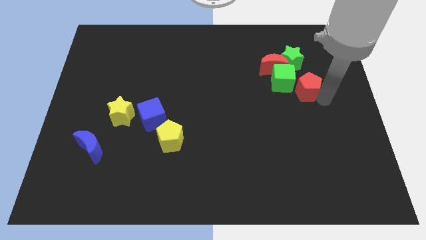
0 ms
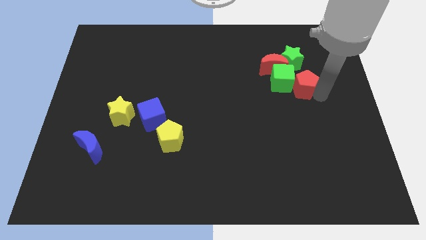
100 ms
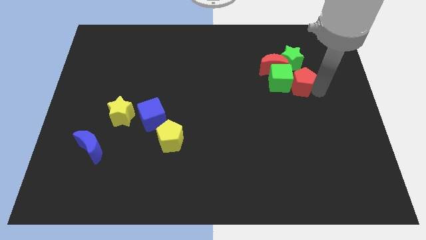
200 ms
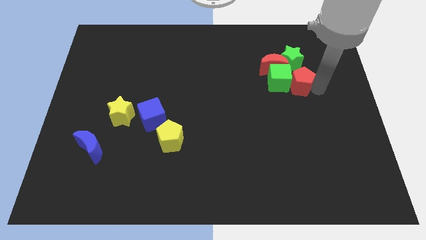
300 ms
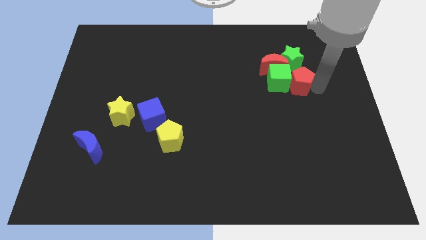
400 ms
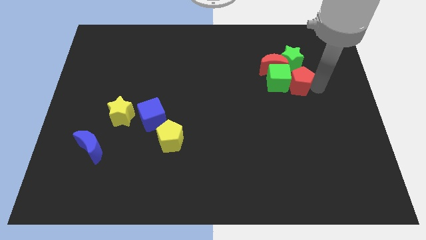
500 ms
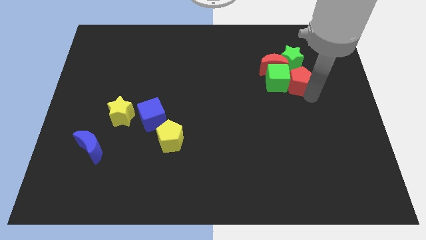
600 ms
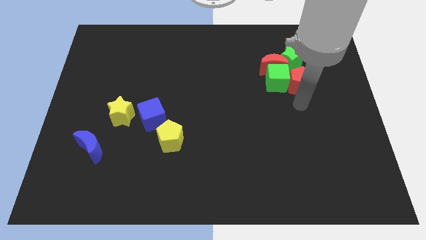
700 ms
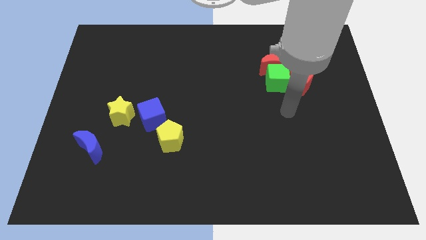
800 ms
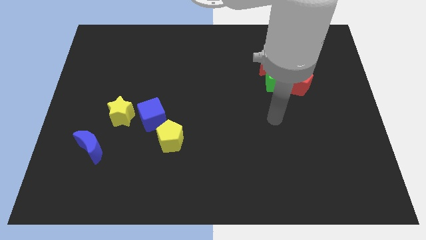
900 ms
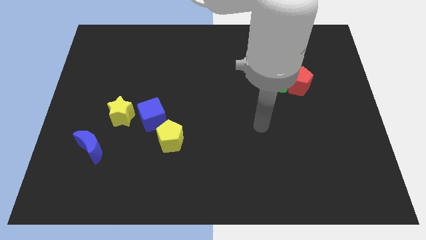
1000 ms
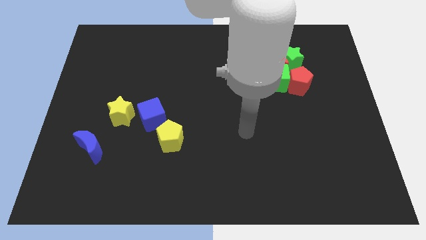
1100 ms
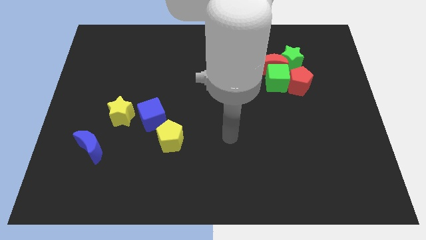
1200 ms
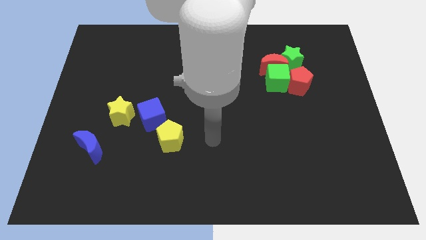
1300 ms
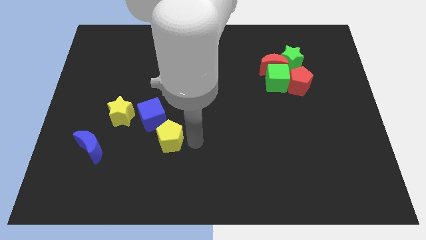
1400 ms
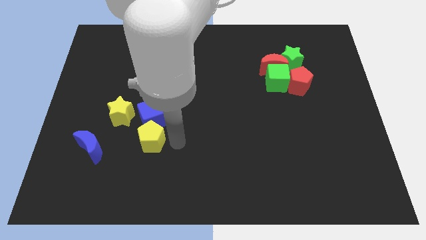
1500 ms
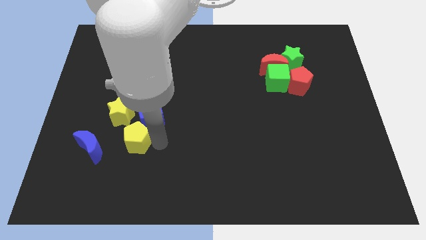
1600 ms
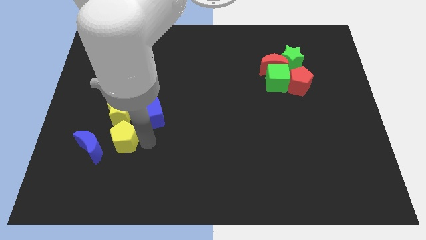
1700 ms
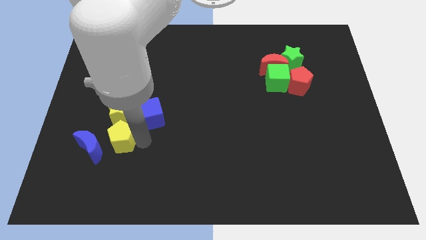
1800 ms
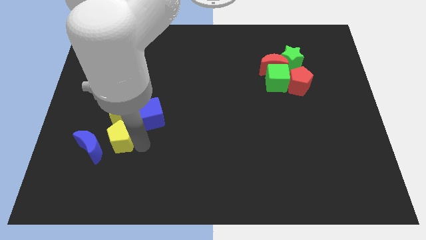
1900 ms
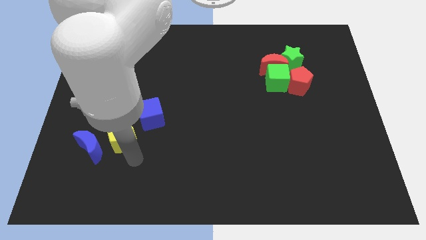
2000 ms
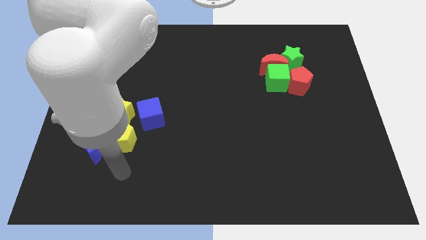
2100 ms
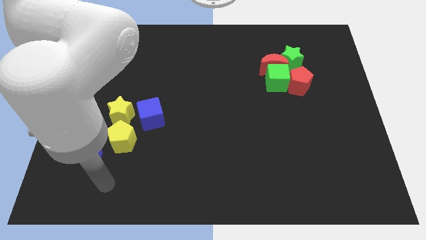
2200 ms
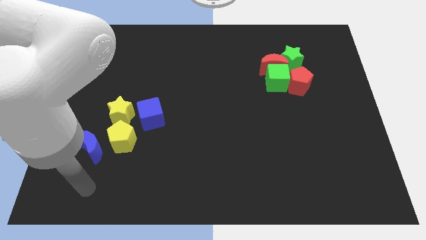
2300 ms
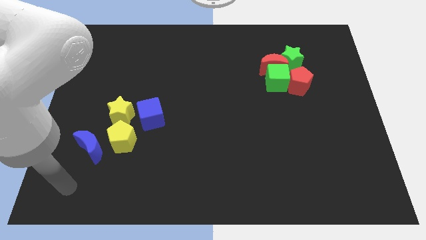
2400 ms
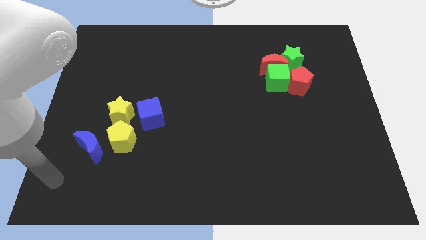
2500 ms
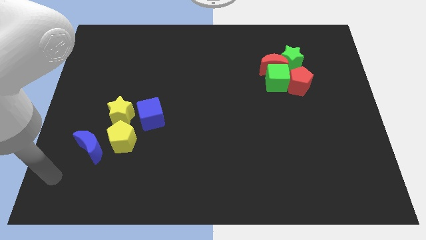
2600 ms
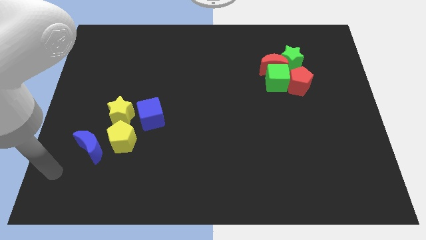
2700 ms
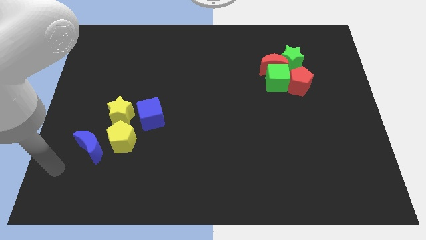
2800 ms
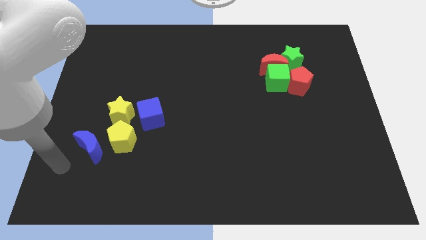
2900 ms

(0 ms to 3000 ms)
place the yellow pentagon below the yellow star

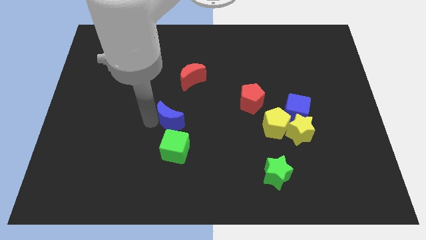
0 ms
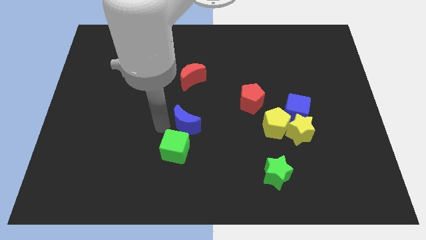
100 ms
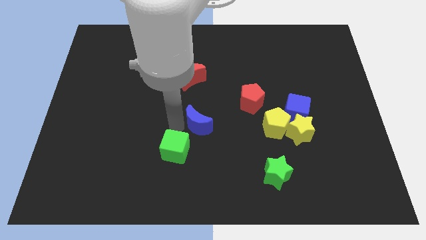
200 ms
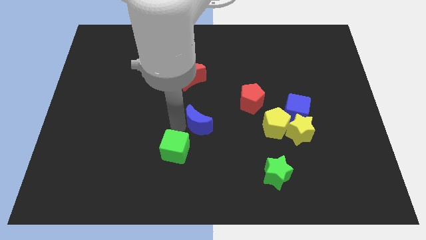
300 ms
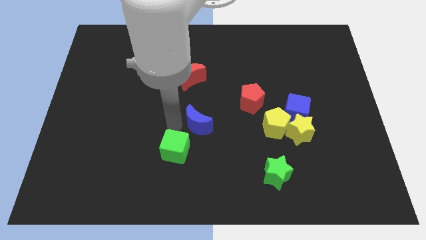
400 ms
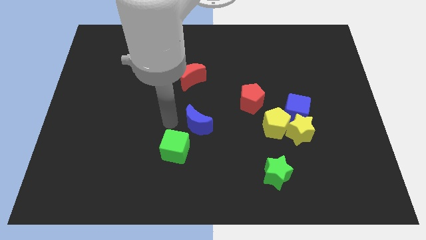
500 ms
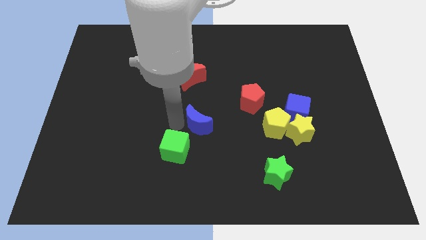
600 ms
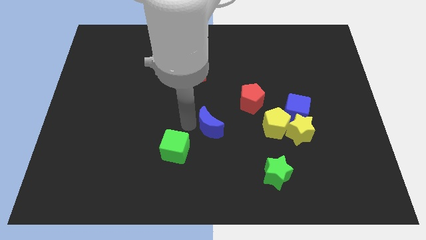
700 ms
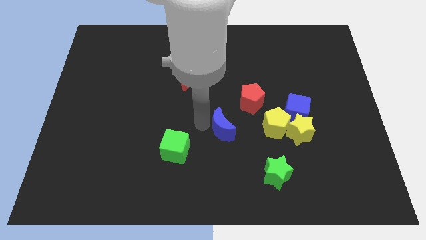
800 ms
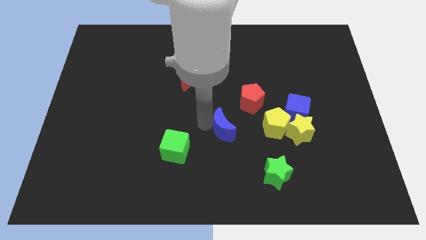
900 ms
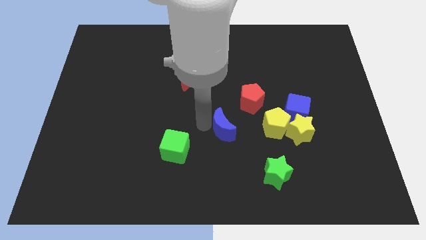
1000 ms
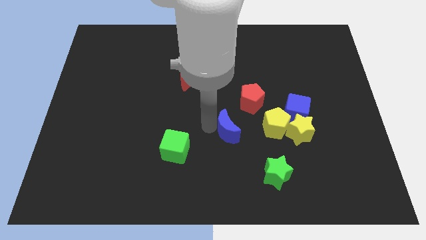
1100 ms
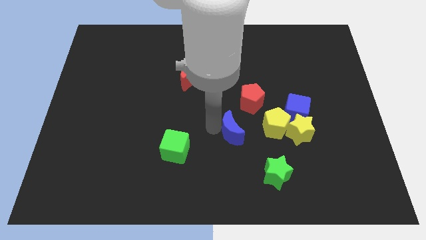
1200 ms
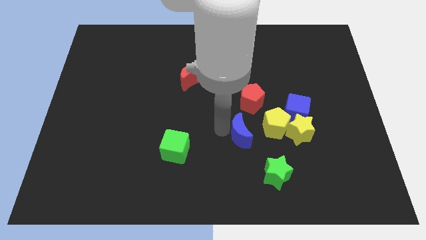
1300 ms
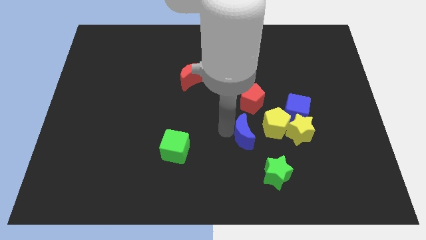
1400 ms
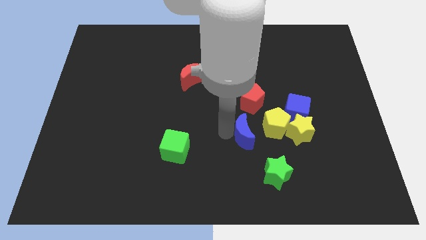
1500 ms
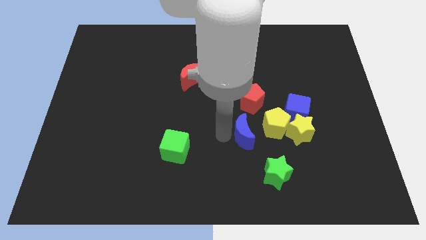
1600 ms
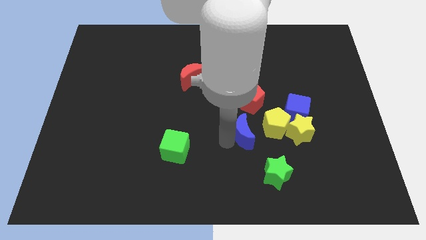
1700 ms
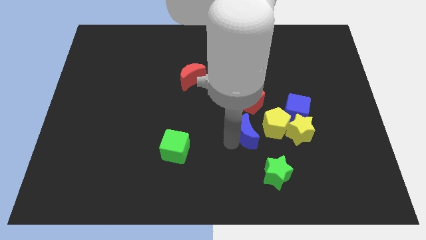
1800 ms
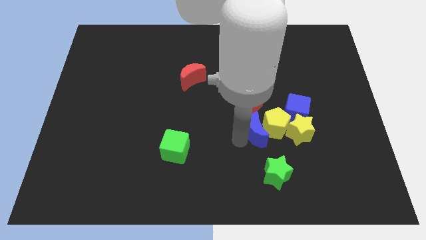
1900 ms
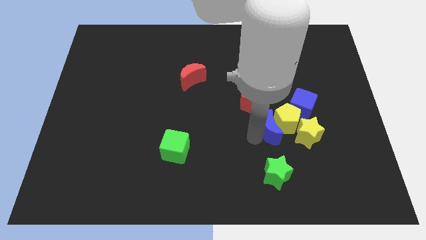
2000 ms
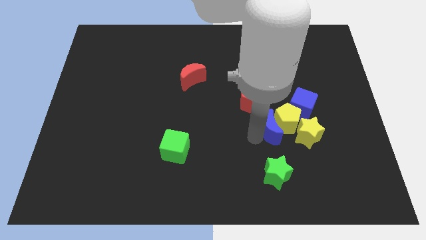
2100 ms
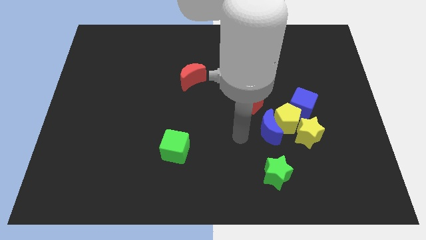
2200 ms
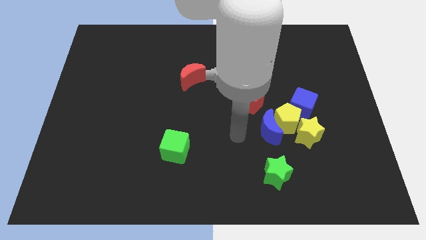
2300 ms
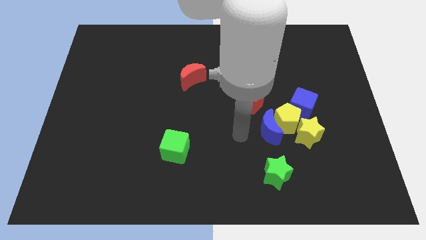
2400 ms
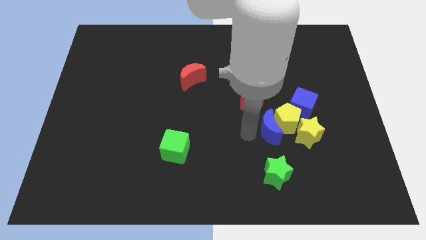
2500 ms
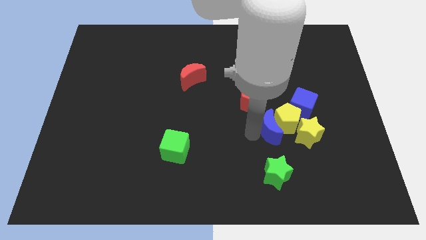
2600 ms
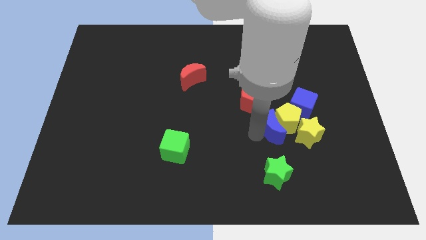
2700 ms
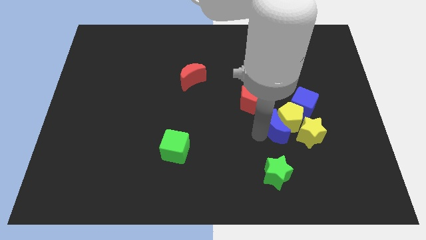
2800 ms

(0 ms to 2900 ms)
push the blue moon into the yellow pentagon

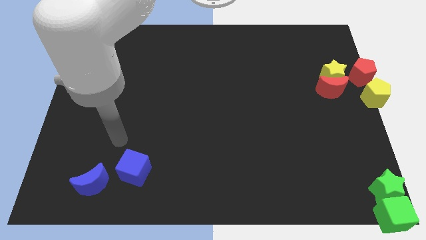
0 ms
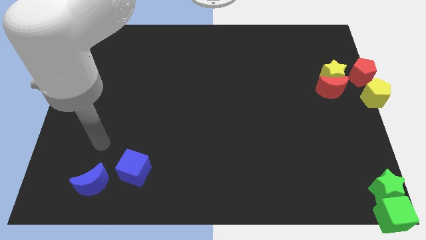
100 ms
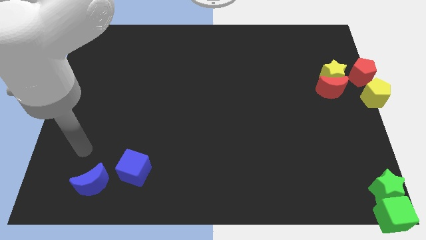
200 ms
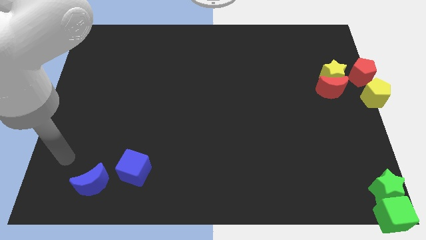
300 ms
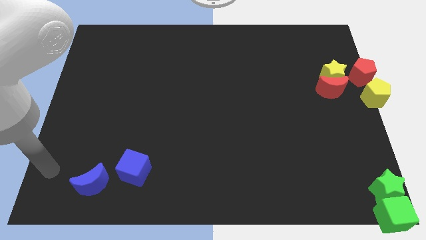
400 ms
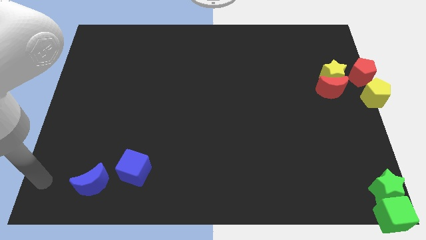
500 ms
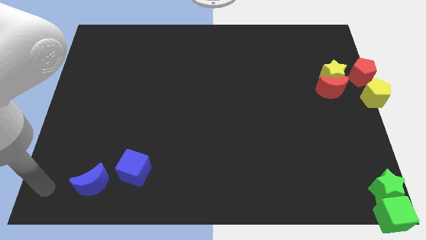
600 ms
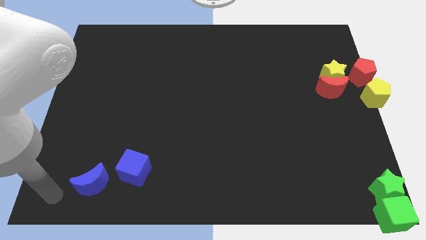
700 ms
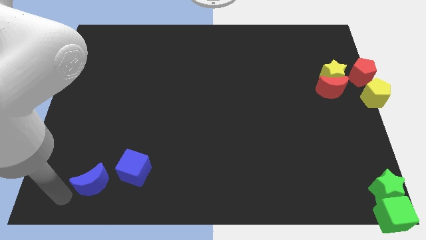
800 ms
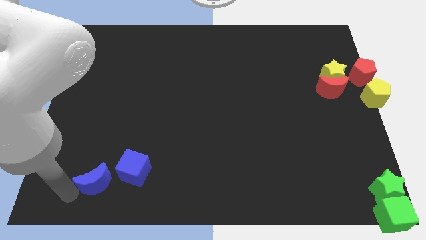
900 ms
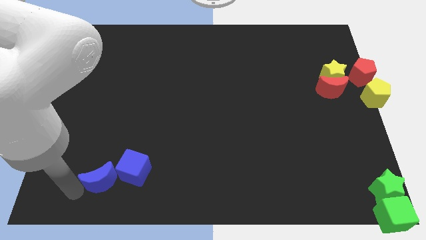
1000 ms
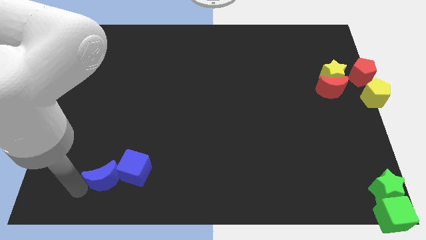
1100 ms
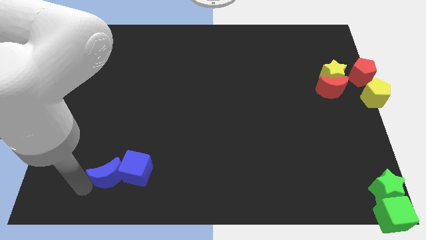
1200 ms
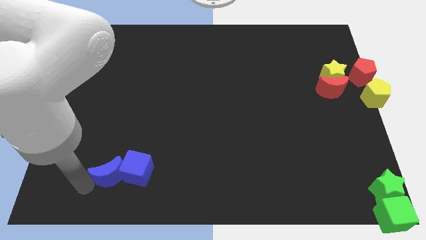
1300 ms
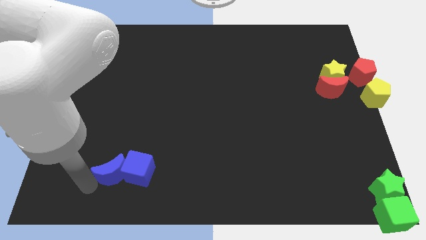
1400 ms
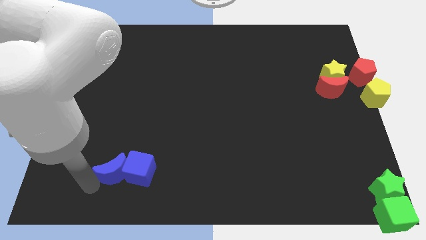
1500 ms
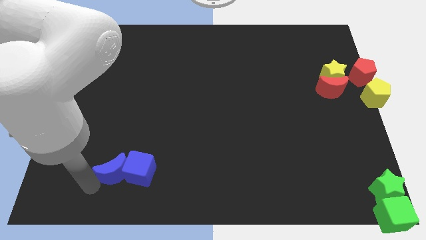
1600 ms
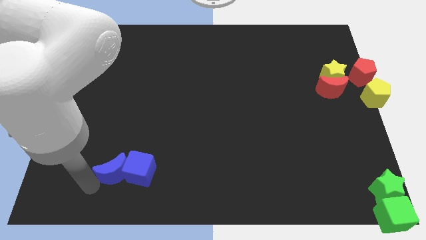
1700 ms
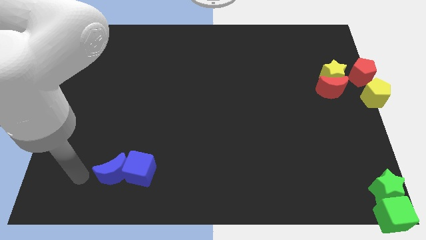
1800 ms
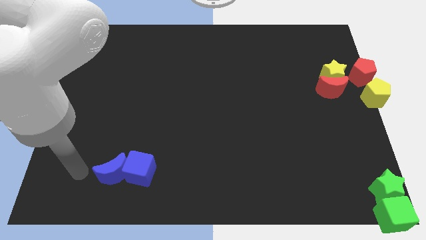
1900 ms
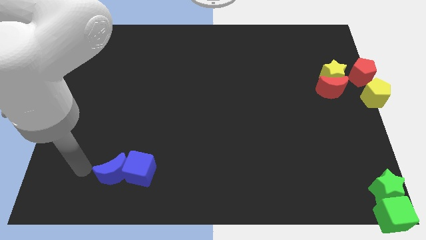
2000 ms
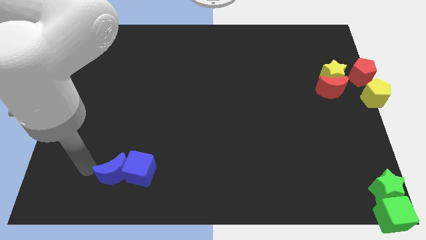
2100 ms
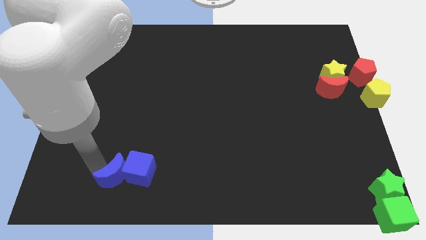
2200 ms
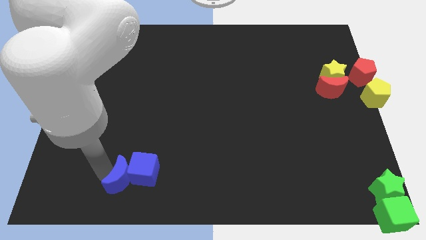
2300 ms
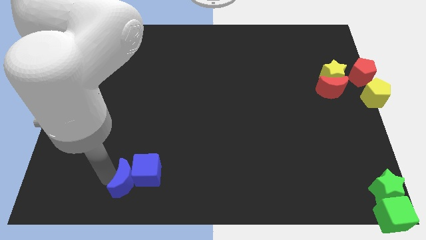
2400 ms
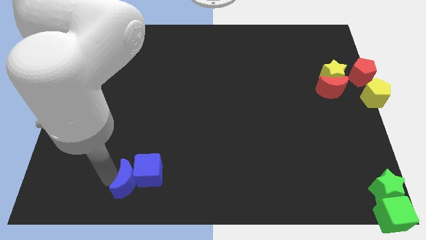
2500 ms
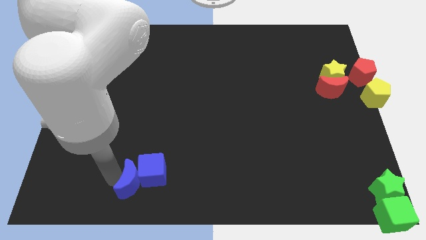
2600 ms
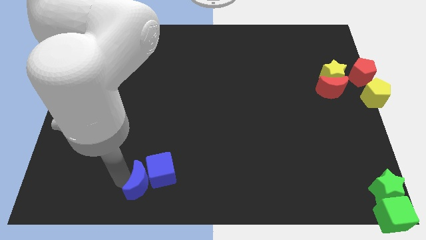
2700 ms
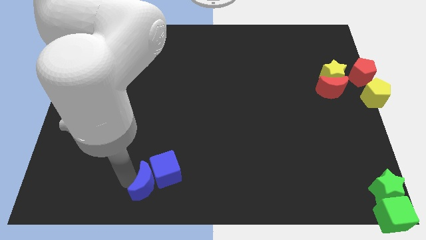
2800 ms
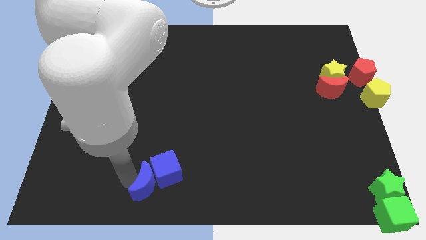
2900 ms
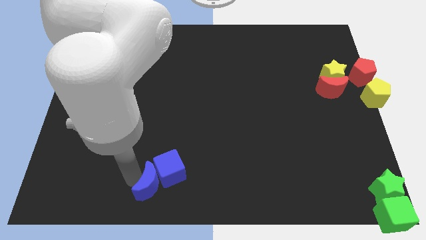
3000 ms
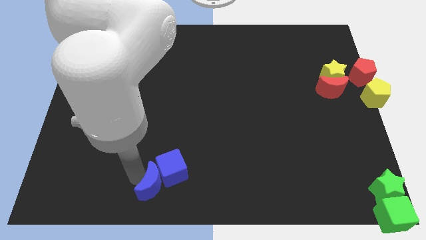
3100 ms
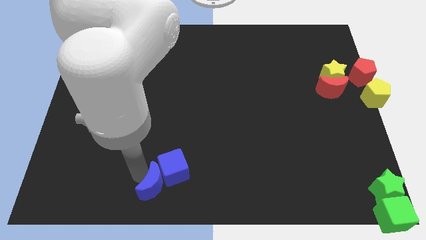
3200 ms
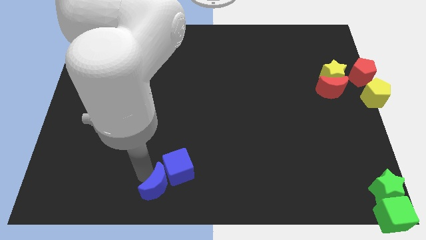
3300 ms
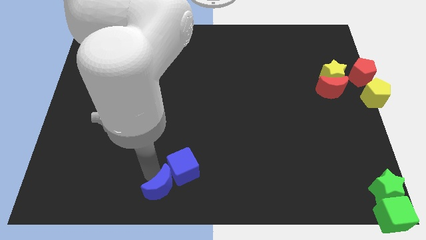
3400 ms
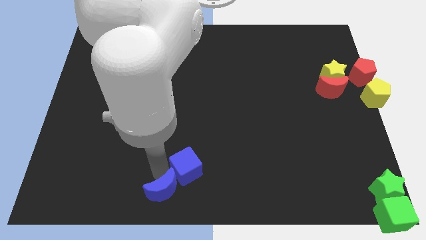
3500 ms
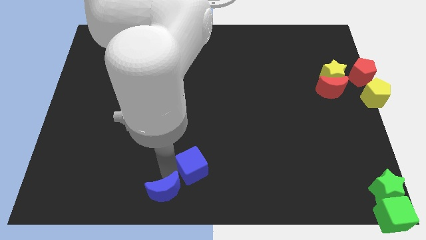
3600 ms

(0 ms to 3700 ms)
move red crescent with blue cube to the bottom center
